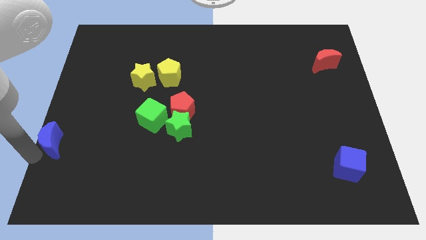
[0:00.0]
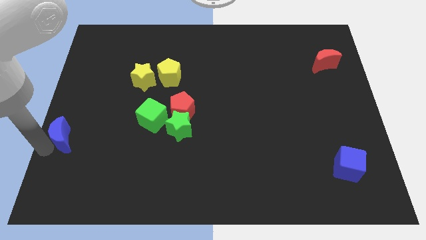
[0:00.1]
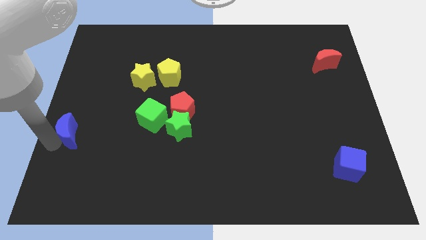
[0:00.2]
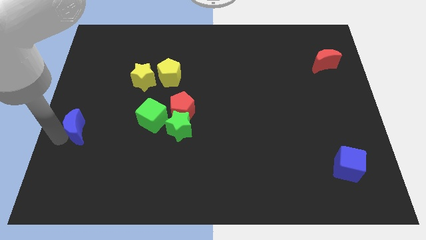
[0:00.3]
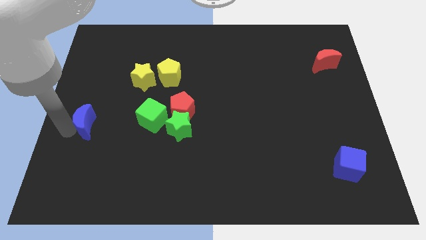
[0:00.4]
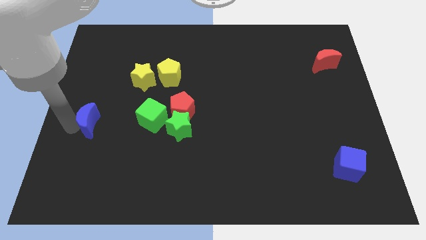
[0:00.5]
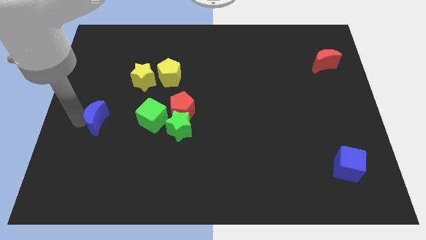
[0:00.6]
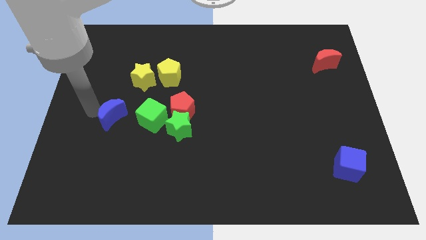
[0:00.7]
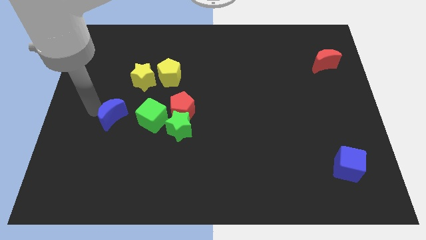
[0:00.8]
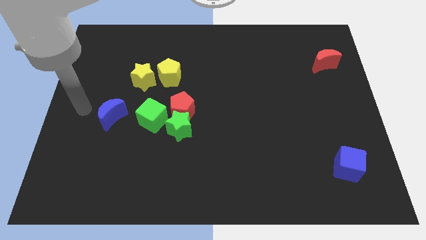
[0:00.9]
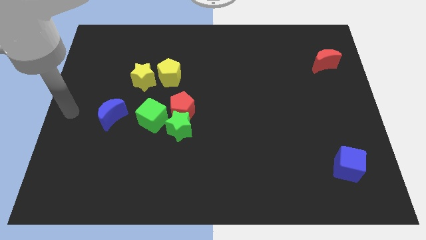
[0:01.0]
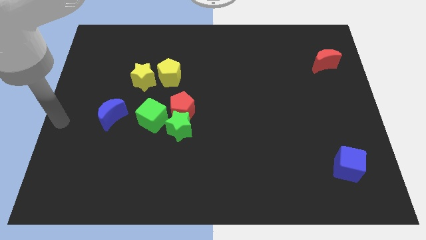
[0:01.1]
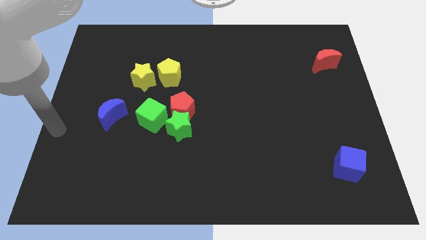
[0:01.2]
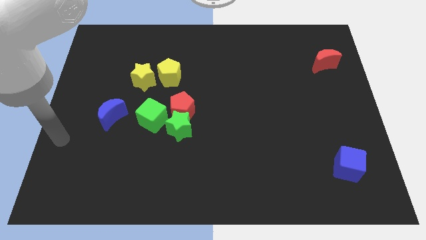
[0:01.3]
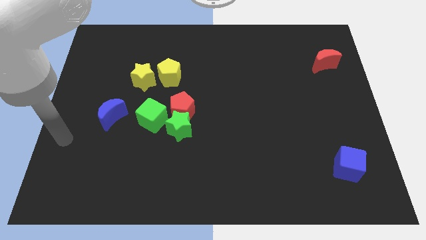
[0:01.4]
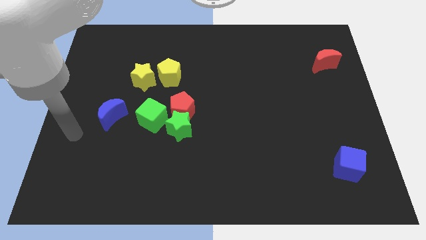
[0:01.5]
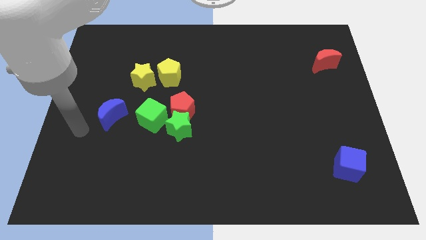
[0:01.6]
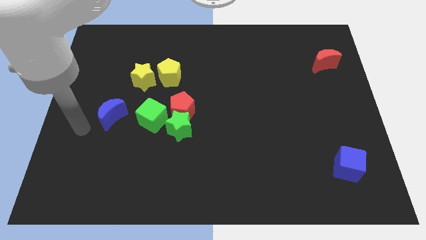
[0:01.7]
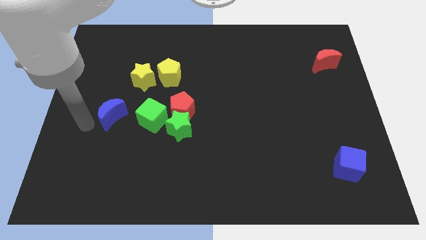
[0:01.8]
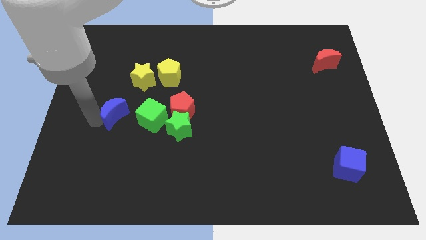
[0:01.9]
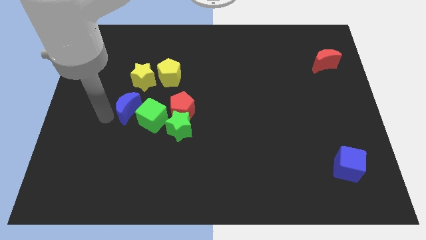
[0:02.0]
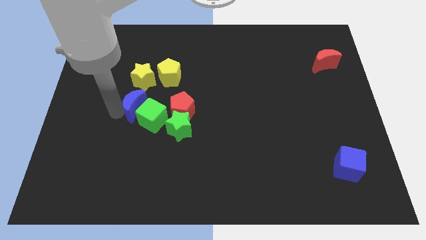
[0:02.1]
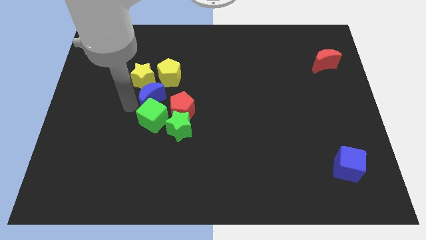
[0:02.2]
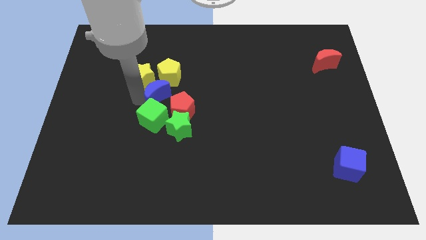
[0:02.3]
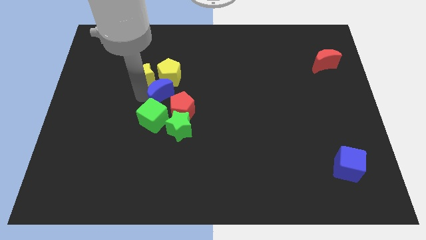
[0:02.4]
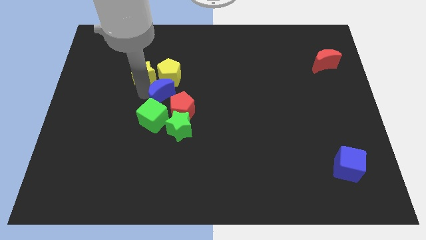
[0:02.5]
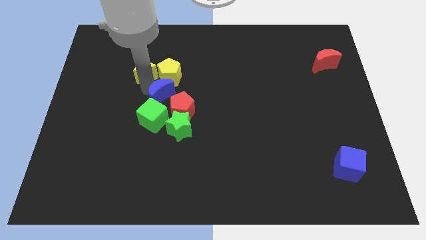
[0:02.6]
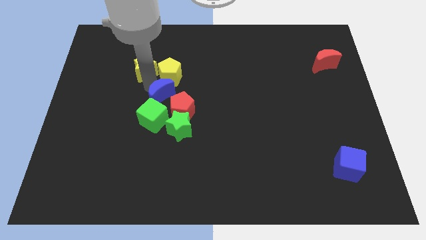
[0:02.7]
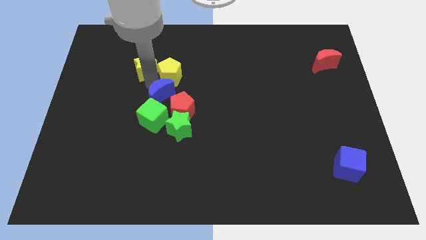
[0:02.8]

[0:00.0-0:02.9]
drag the blue moon and place it in between group of blocks

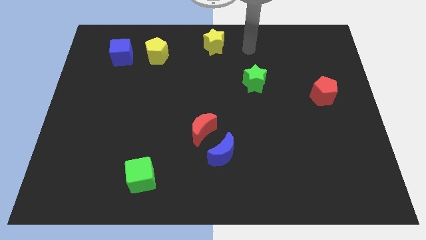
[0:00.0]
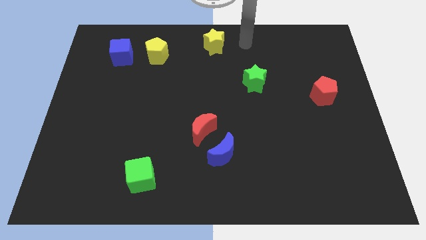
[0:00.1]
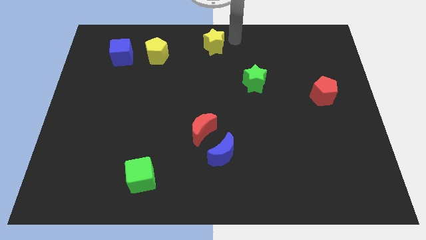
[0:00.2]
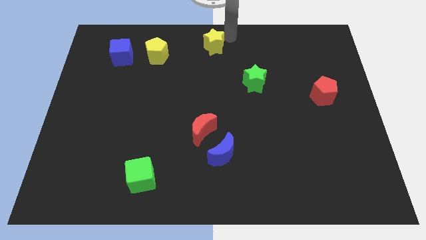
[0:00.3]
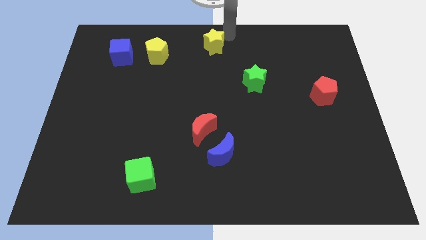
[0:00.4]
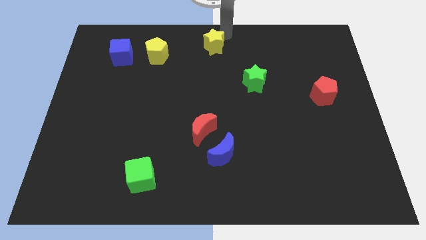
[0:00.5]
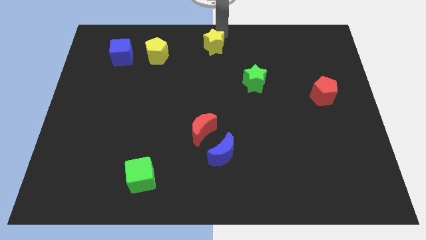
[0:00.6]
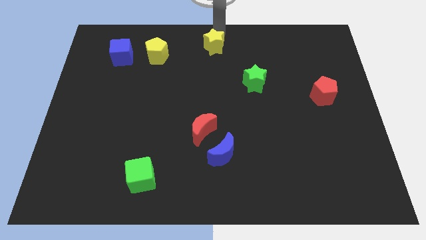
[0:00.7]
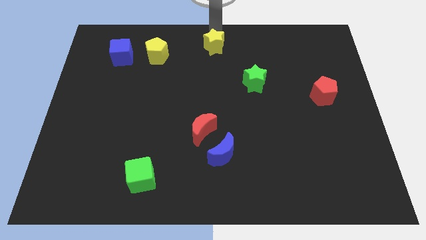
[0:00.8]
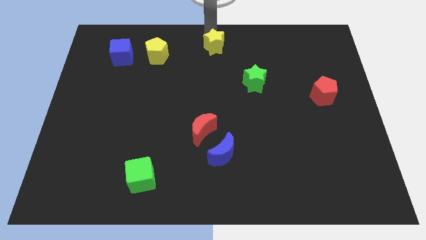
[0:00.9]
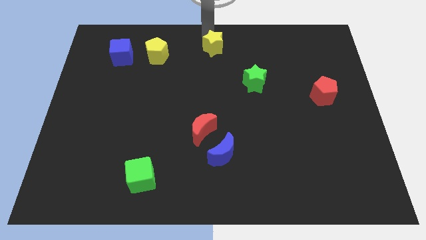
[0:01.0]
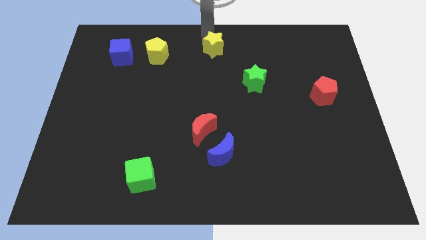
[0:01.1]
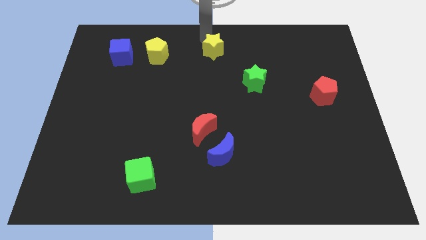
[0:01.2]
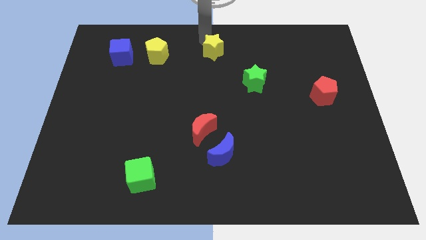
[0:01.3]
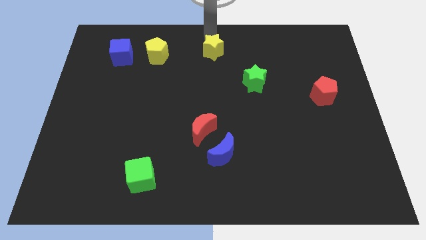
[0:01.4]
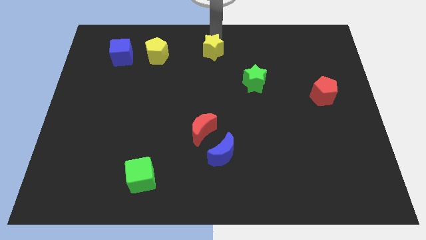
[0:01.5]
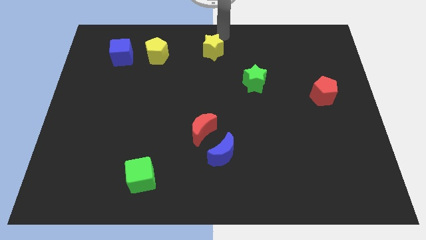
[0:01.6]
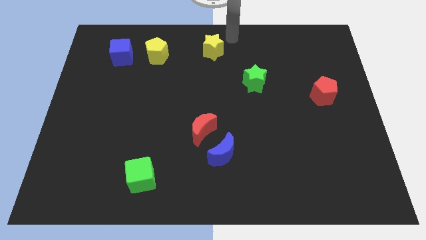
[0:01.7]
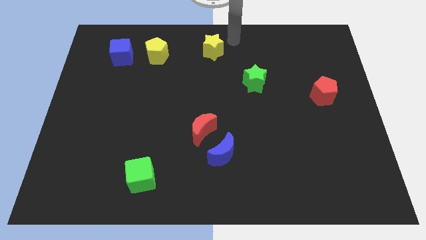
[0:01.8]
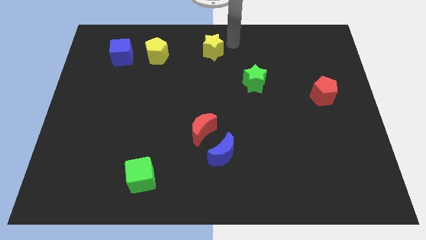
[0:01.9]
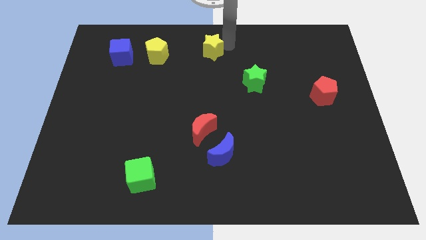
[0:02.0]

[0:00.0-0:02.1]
place the yellow star towards the top center of the board

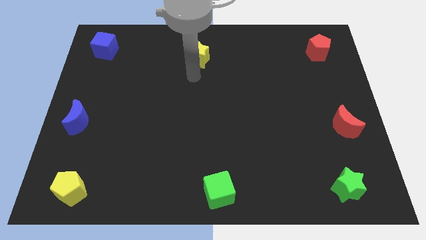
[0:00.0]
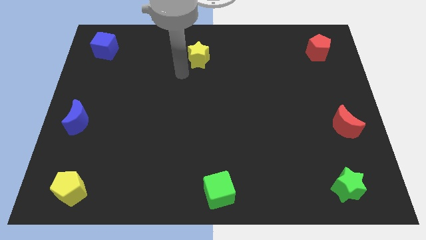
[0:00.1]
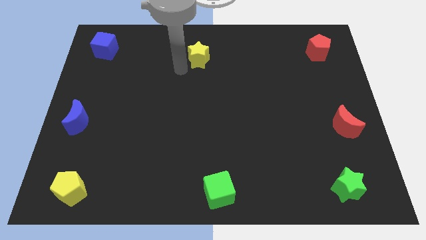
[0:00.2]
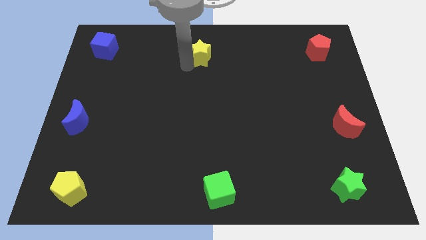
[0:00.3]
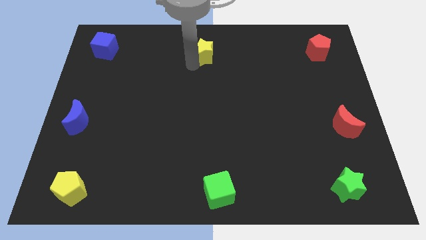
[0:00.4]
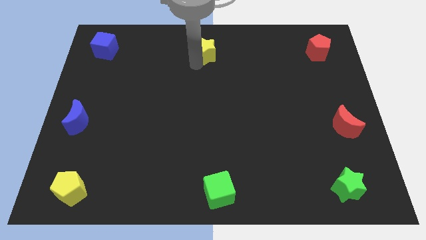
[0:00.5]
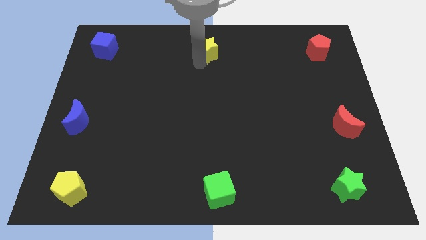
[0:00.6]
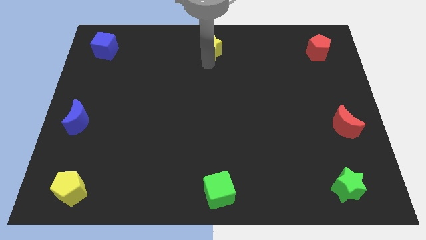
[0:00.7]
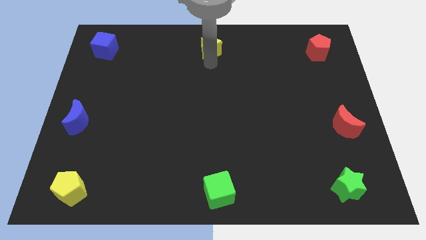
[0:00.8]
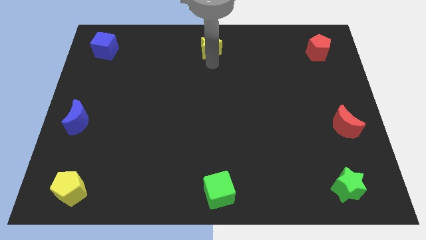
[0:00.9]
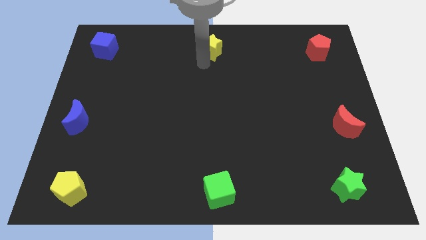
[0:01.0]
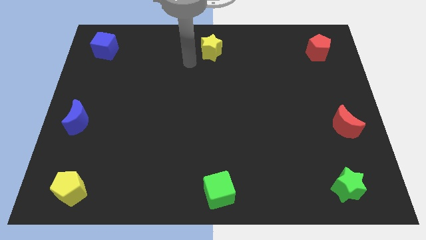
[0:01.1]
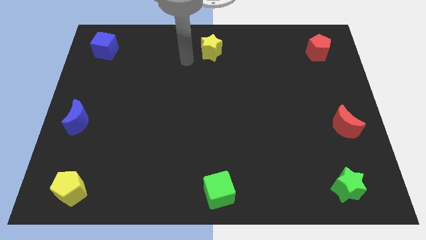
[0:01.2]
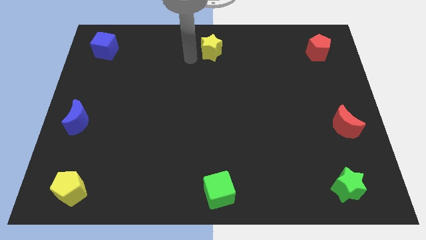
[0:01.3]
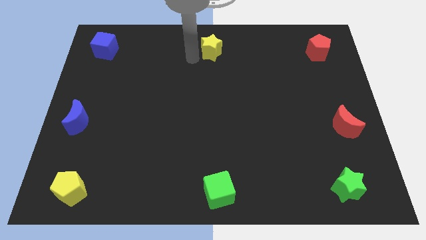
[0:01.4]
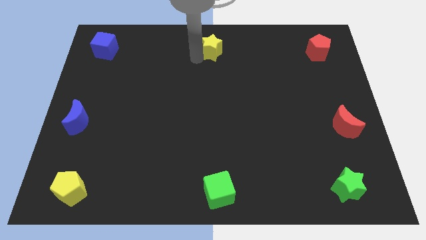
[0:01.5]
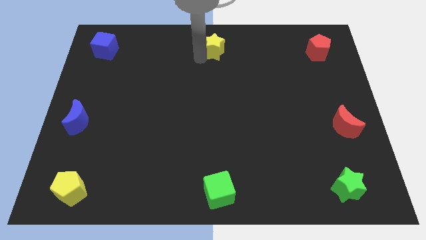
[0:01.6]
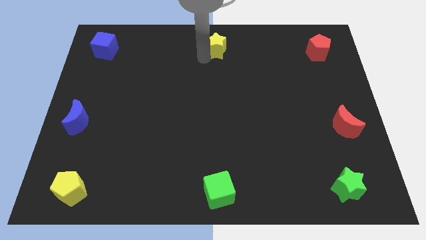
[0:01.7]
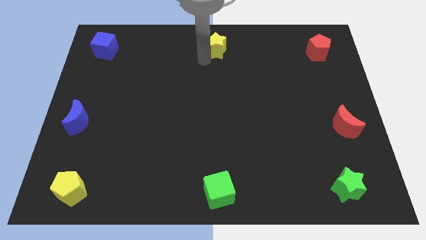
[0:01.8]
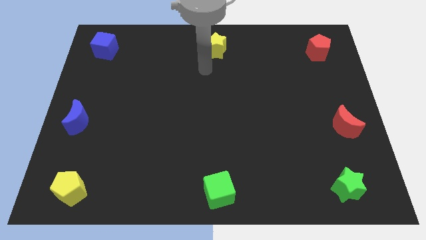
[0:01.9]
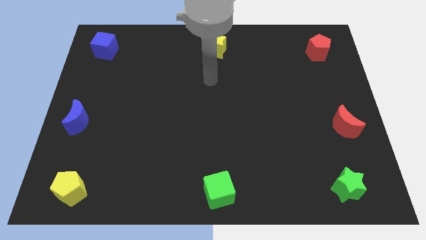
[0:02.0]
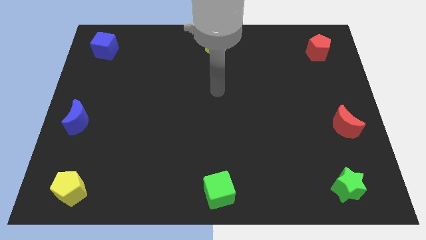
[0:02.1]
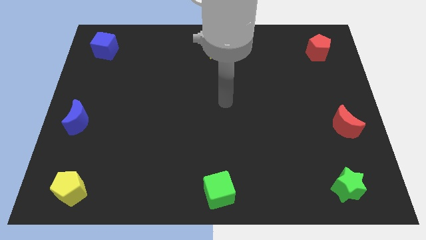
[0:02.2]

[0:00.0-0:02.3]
push the yellow star to the top center of the board

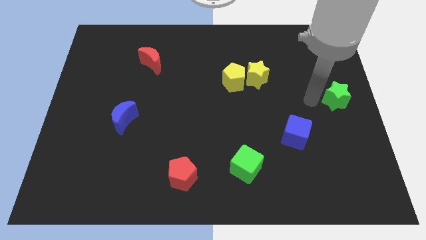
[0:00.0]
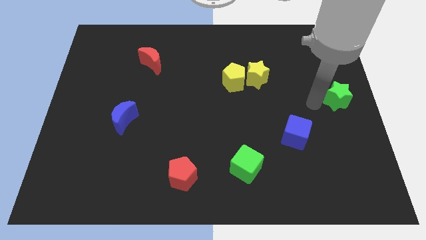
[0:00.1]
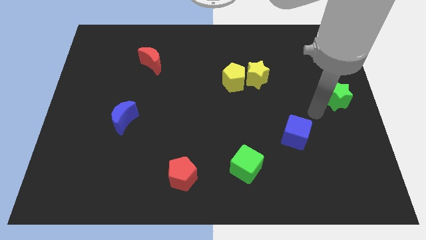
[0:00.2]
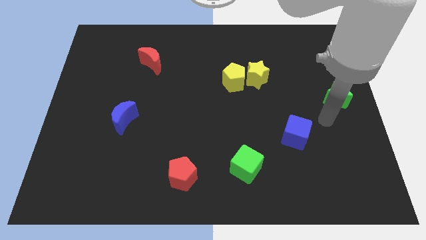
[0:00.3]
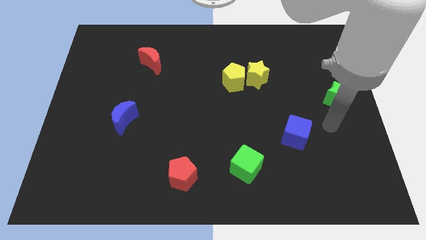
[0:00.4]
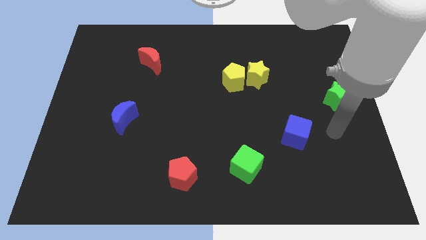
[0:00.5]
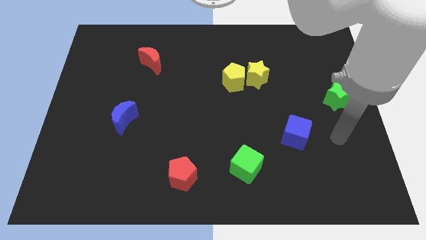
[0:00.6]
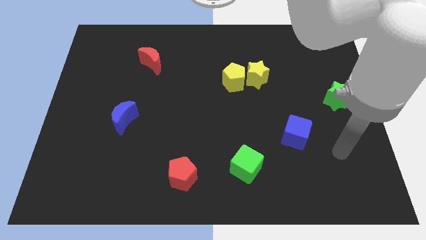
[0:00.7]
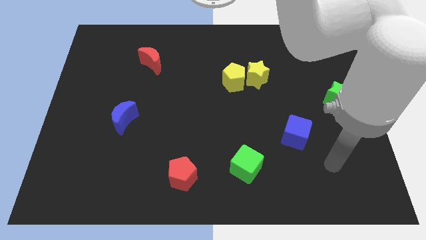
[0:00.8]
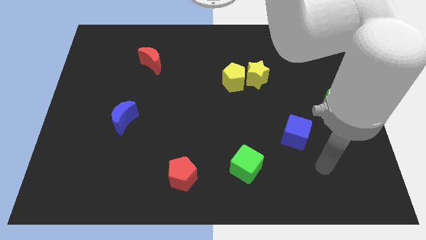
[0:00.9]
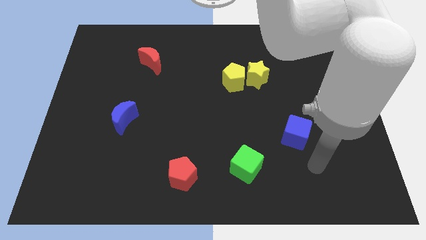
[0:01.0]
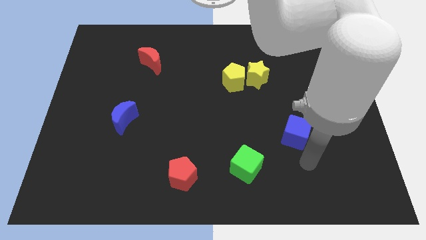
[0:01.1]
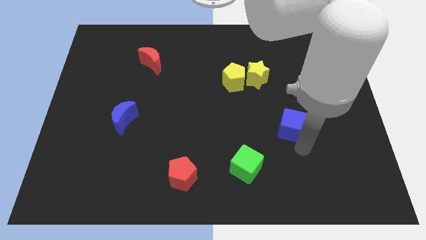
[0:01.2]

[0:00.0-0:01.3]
touch the blue cube with your arm

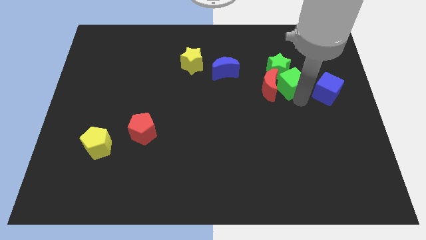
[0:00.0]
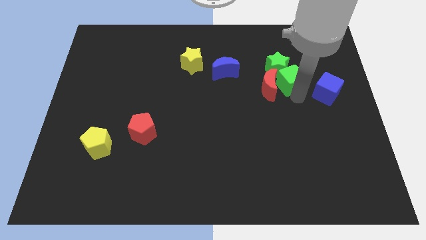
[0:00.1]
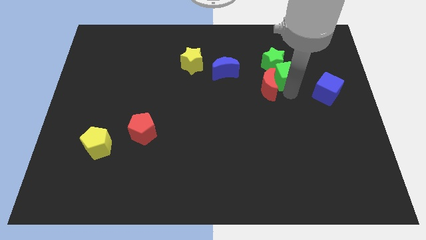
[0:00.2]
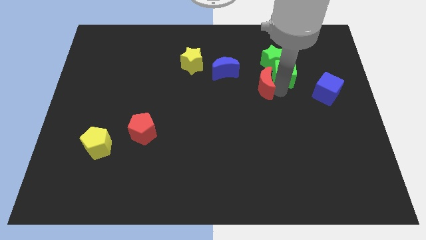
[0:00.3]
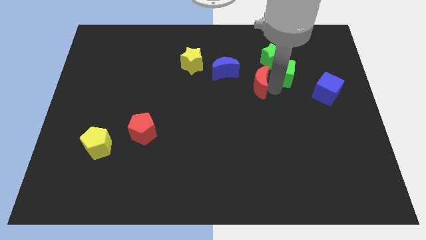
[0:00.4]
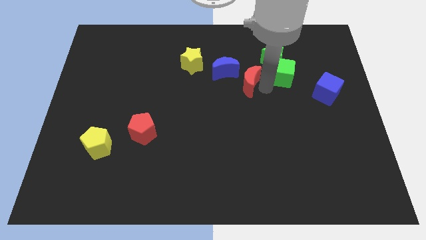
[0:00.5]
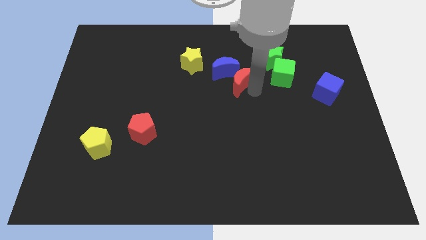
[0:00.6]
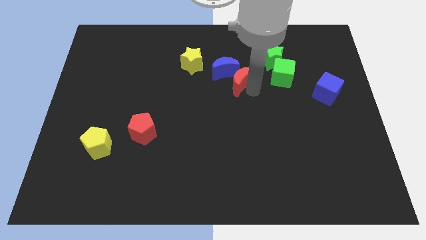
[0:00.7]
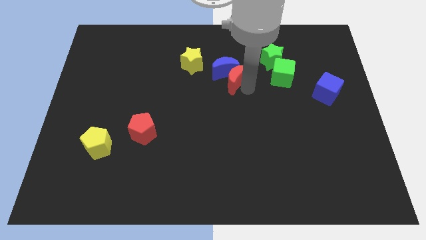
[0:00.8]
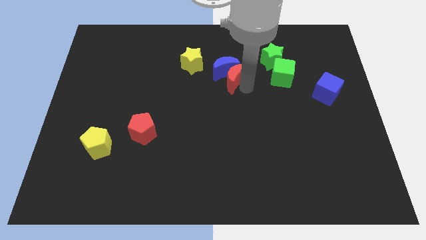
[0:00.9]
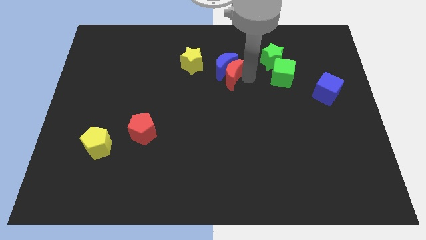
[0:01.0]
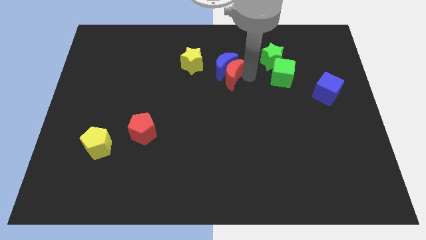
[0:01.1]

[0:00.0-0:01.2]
separate the red moon from the green cube
